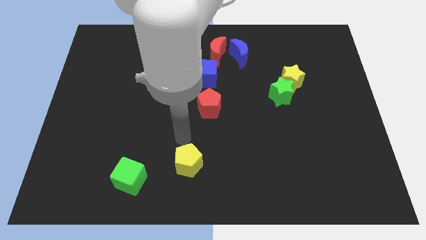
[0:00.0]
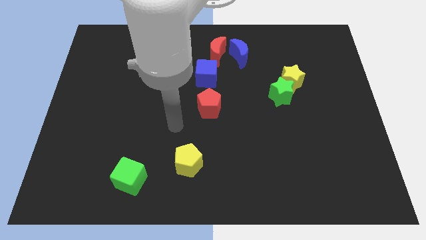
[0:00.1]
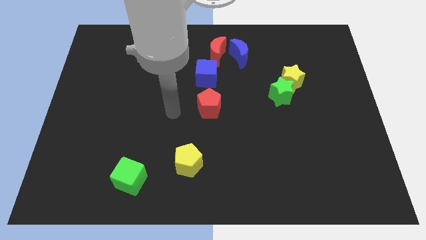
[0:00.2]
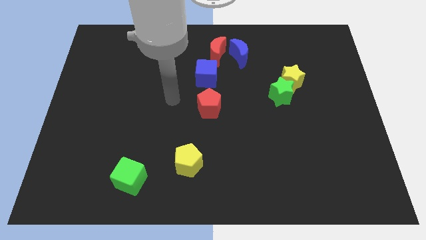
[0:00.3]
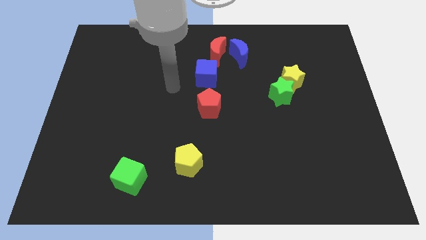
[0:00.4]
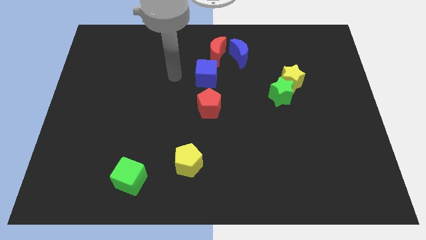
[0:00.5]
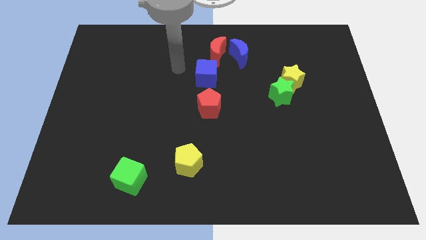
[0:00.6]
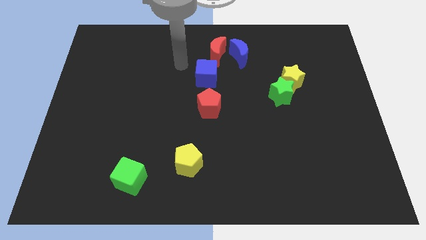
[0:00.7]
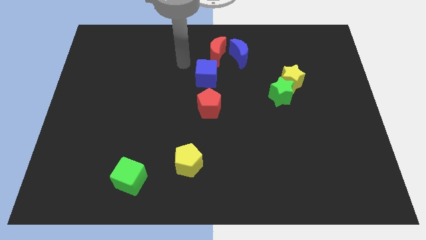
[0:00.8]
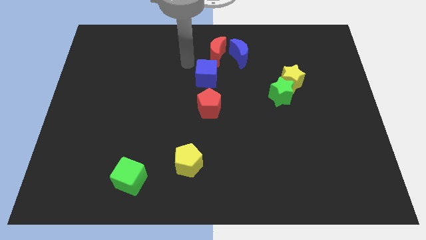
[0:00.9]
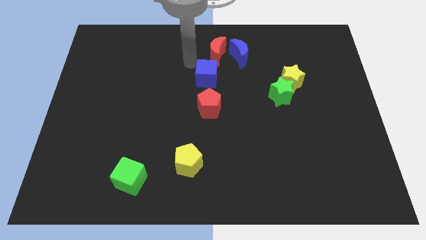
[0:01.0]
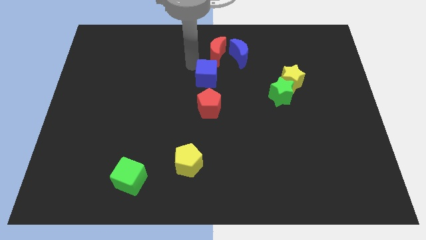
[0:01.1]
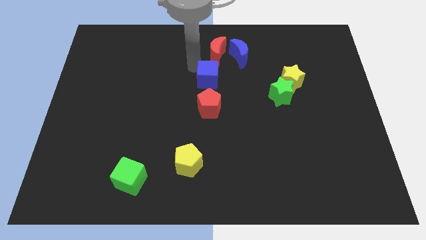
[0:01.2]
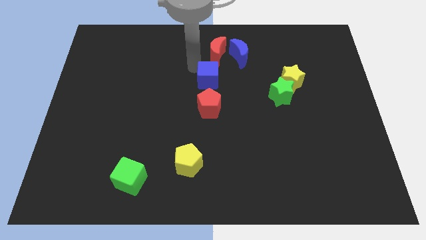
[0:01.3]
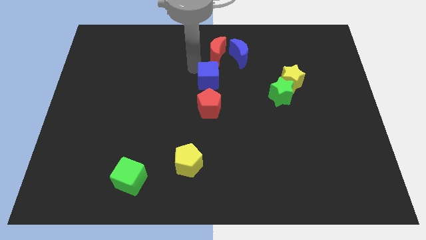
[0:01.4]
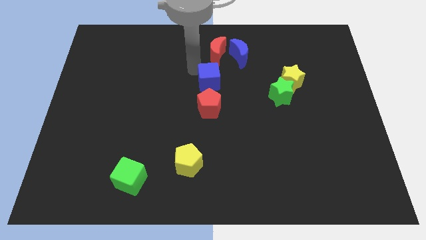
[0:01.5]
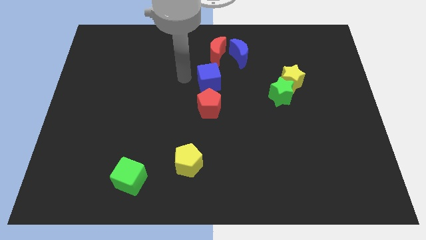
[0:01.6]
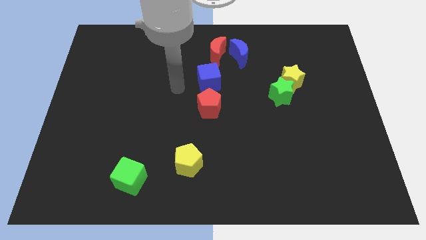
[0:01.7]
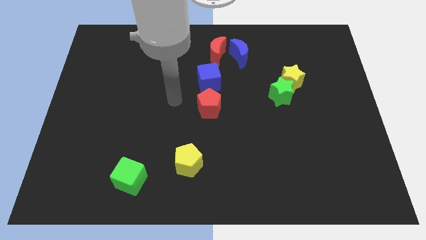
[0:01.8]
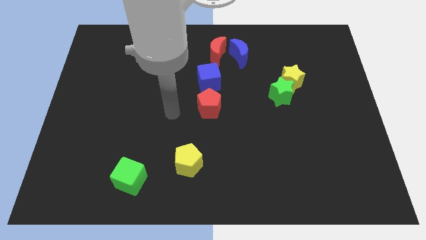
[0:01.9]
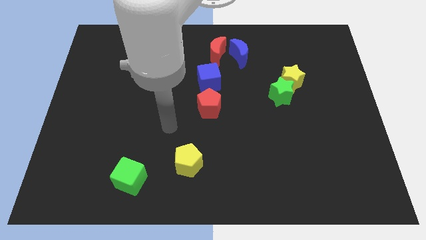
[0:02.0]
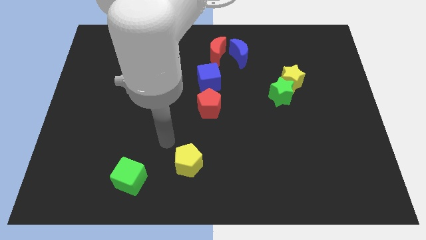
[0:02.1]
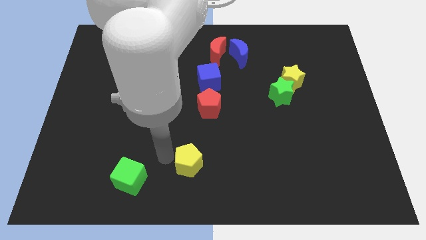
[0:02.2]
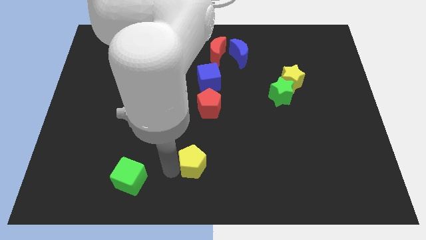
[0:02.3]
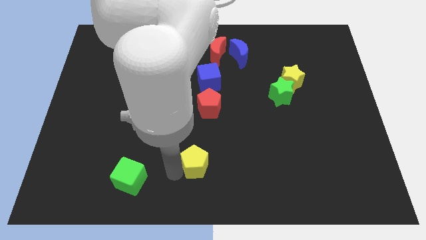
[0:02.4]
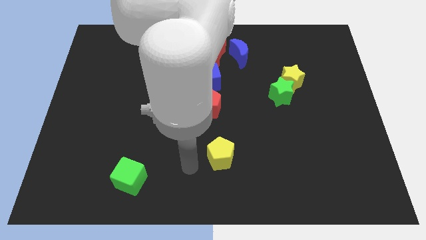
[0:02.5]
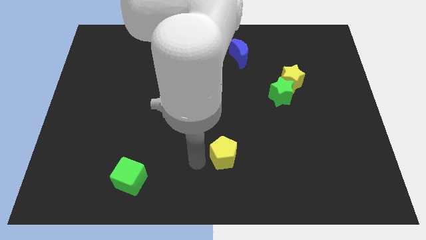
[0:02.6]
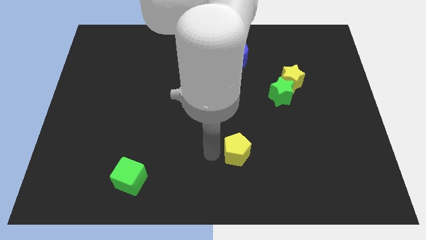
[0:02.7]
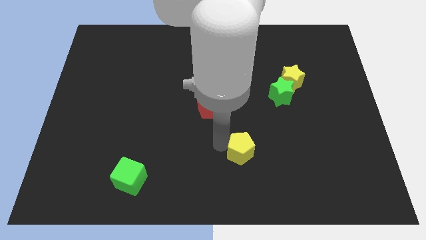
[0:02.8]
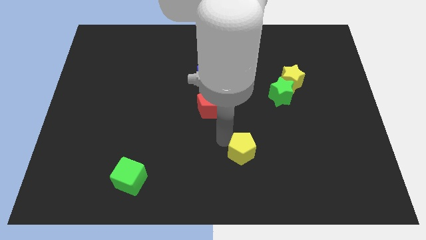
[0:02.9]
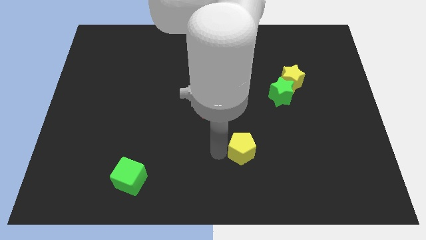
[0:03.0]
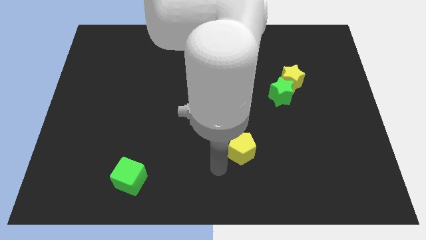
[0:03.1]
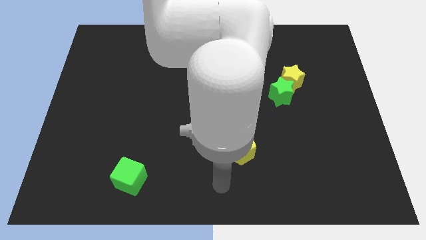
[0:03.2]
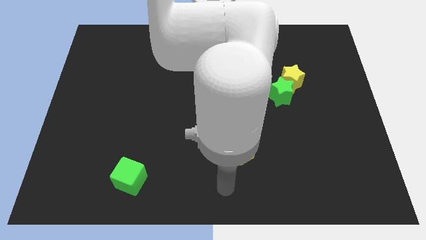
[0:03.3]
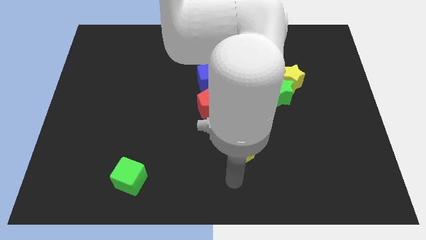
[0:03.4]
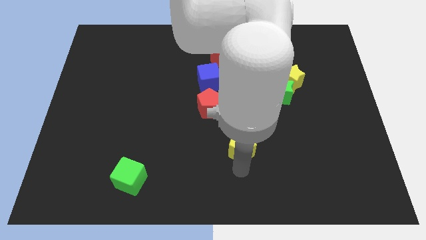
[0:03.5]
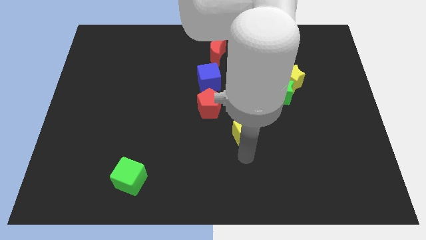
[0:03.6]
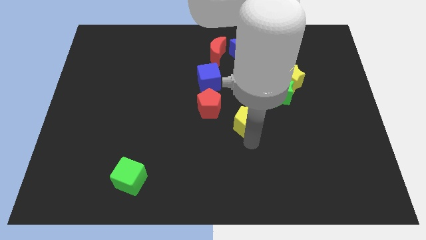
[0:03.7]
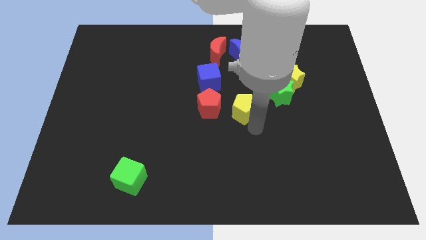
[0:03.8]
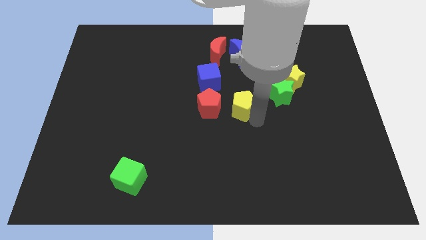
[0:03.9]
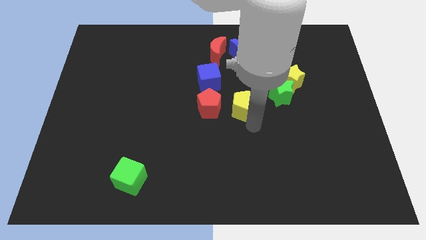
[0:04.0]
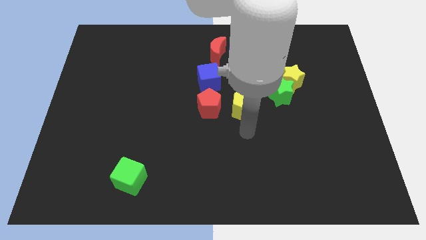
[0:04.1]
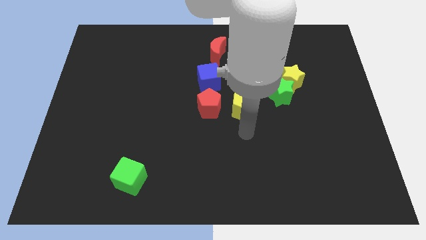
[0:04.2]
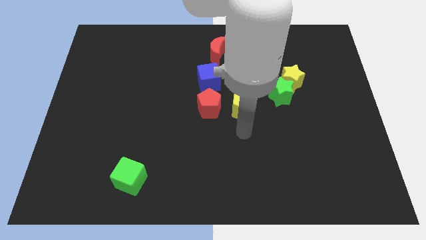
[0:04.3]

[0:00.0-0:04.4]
place the yellow pentagon to the right of the red pentagon

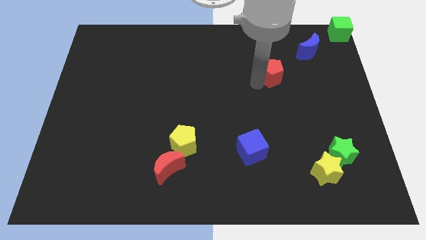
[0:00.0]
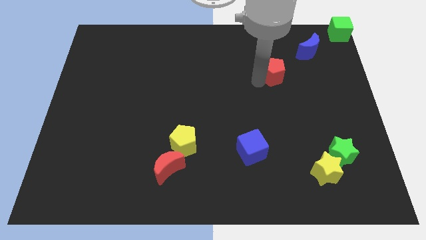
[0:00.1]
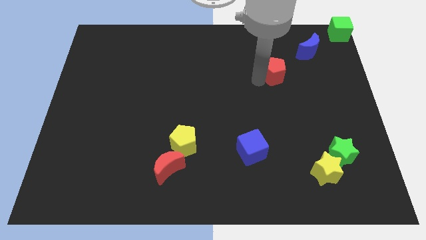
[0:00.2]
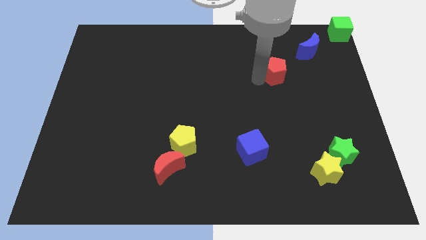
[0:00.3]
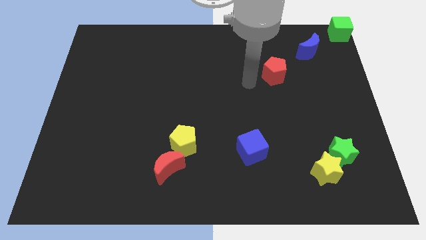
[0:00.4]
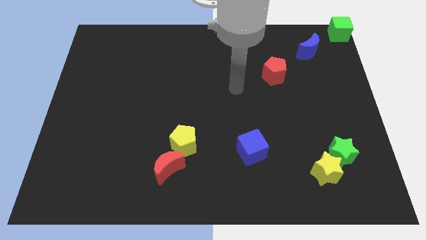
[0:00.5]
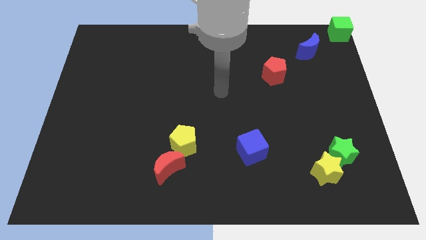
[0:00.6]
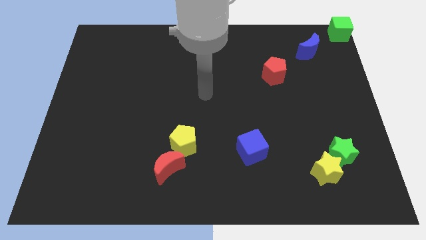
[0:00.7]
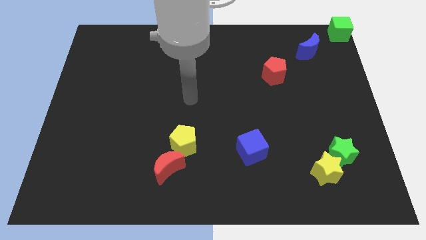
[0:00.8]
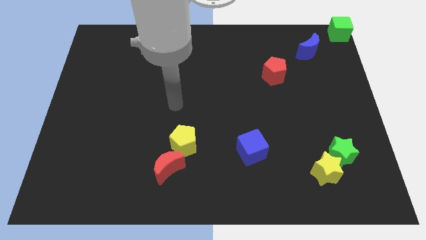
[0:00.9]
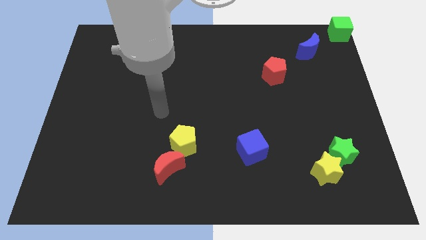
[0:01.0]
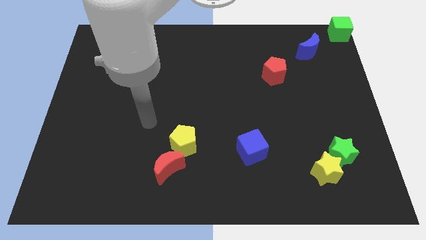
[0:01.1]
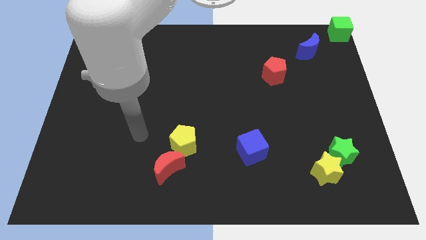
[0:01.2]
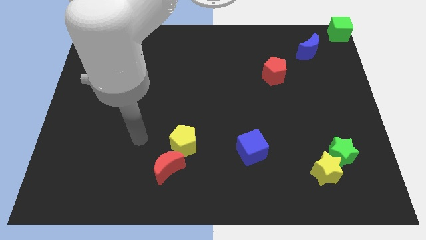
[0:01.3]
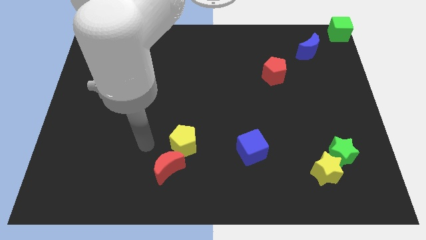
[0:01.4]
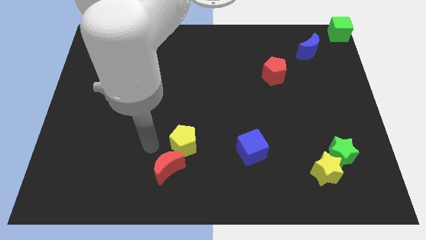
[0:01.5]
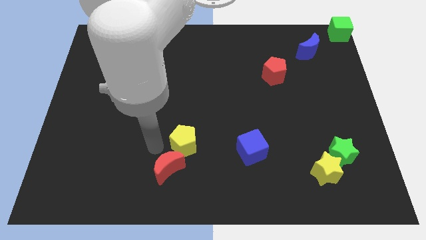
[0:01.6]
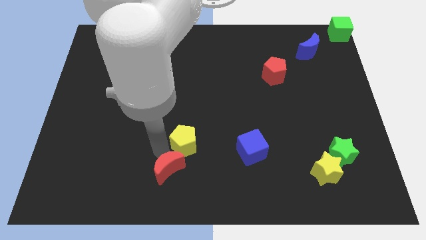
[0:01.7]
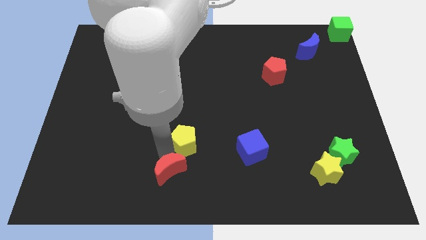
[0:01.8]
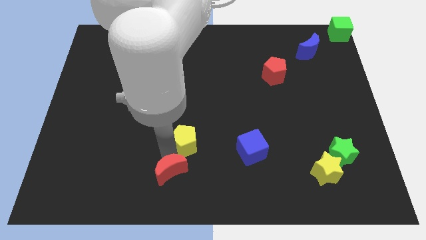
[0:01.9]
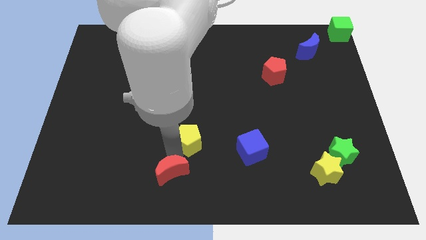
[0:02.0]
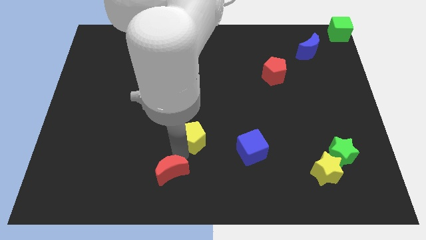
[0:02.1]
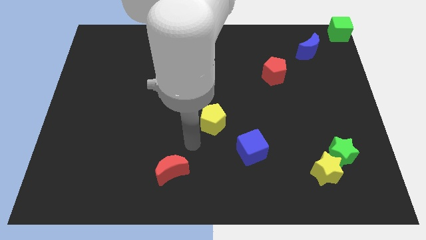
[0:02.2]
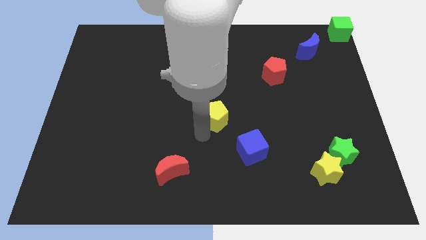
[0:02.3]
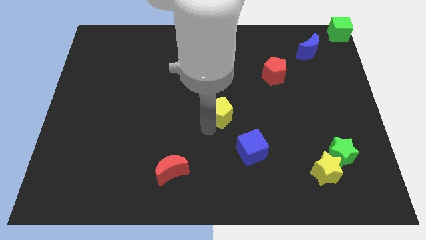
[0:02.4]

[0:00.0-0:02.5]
separate the yellow pentagon and the red moon

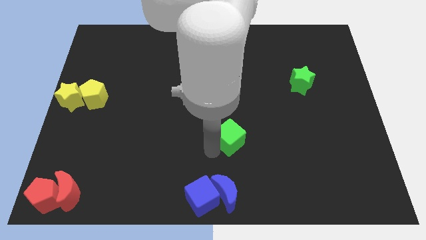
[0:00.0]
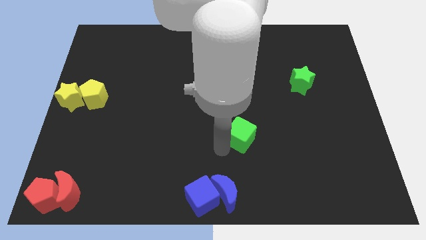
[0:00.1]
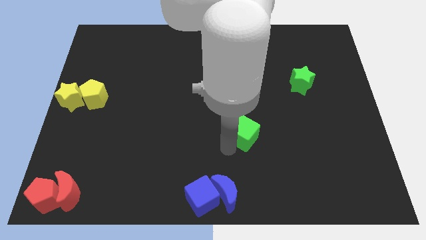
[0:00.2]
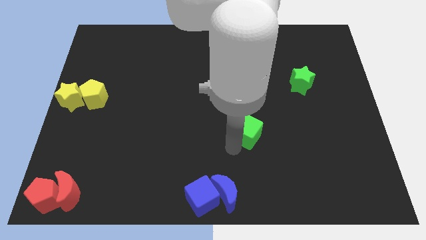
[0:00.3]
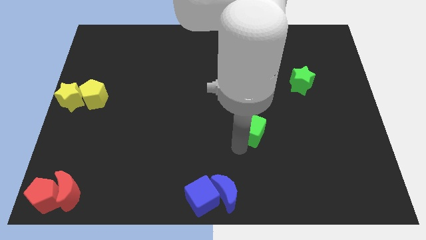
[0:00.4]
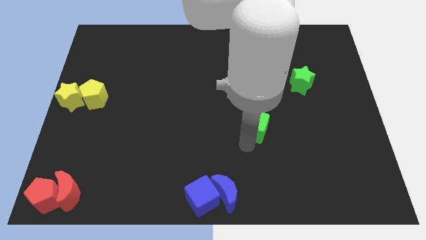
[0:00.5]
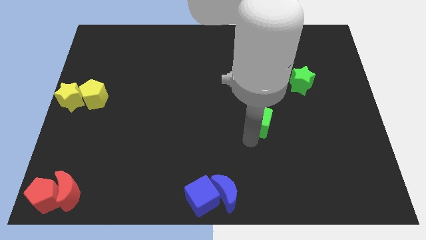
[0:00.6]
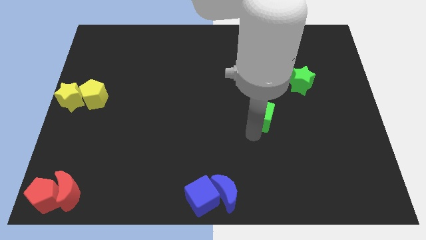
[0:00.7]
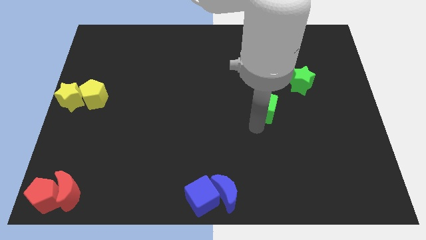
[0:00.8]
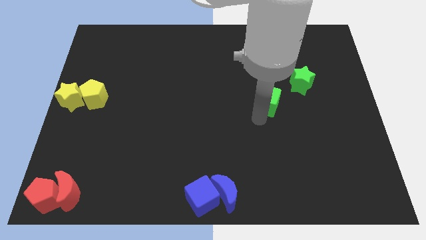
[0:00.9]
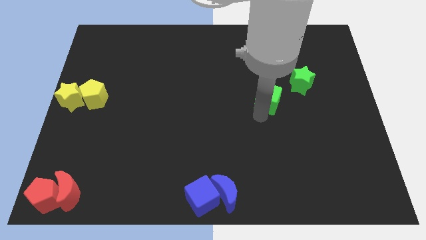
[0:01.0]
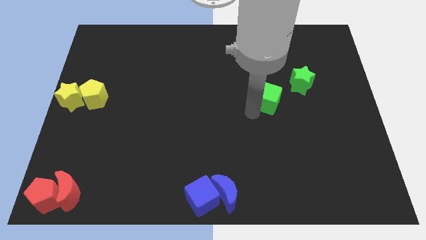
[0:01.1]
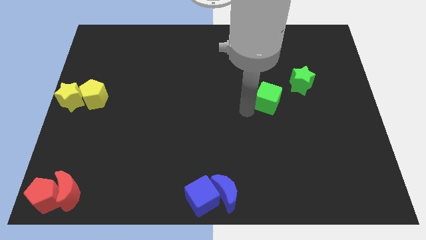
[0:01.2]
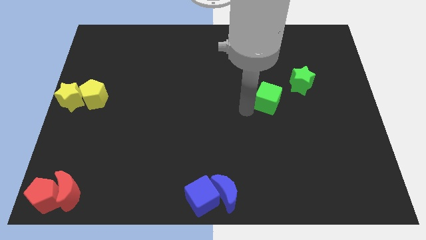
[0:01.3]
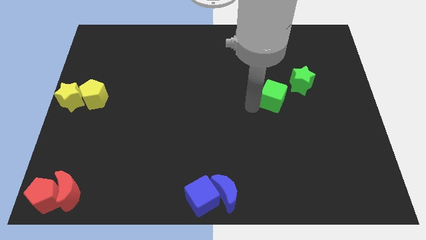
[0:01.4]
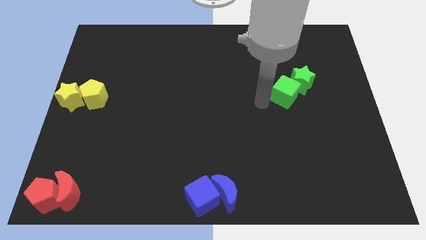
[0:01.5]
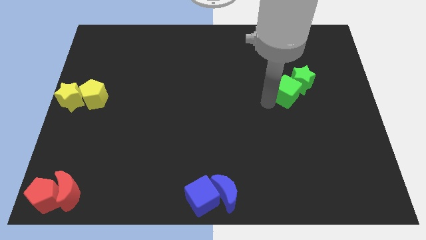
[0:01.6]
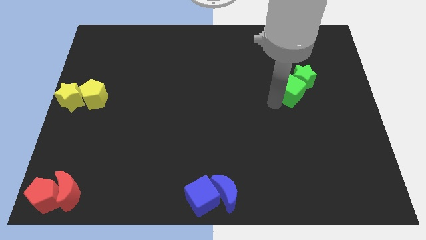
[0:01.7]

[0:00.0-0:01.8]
slide the green cube into the green star

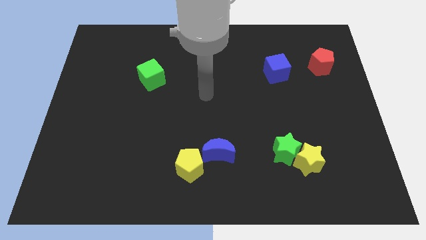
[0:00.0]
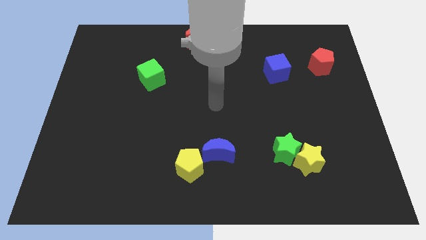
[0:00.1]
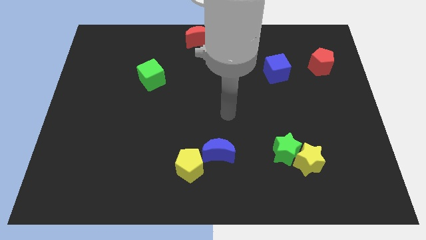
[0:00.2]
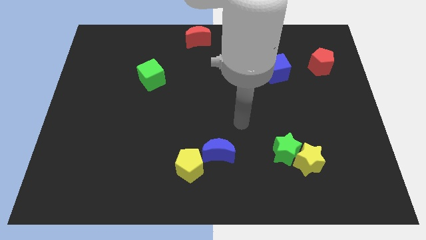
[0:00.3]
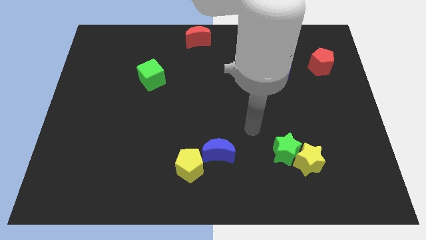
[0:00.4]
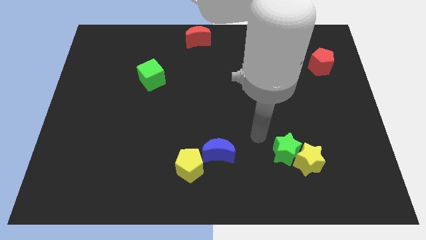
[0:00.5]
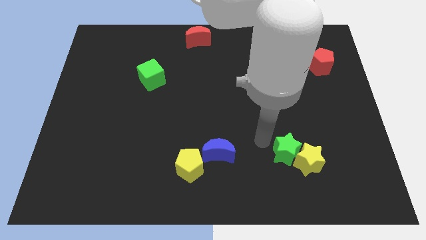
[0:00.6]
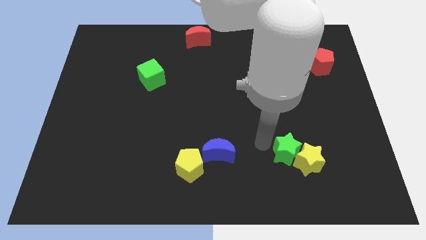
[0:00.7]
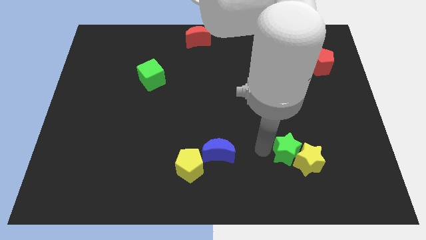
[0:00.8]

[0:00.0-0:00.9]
point your arm at the left of the green star
